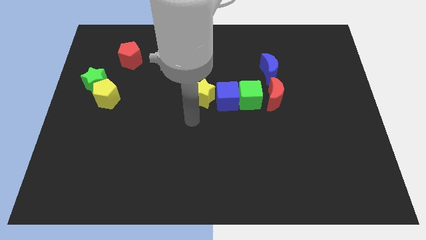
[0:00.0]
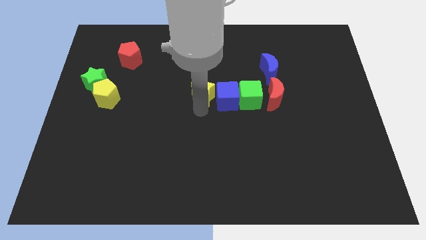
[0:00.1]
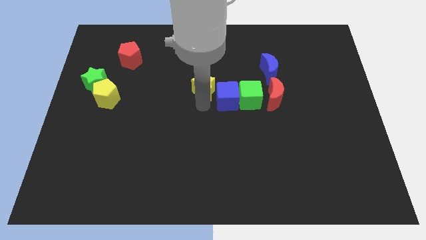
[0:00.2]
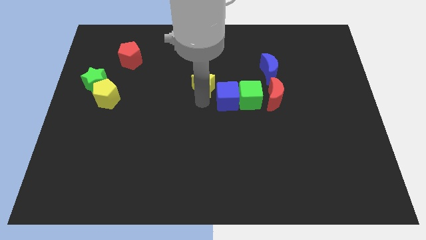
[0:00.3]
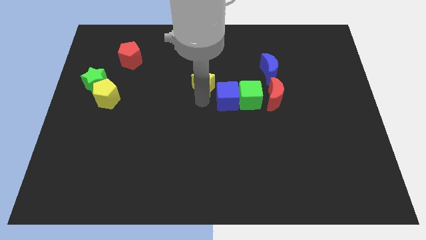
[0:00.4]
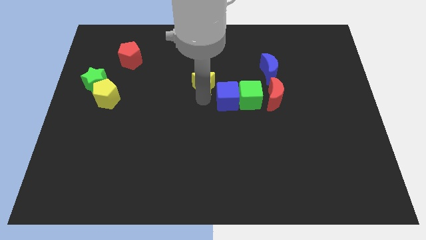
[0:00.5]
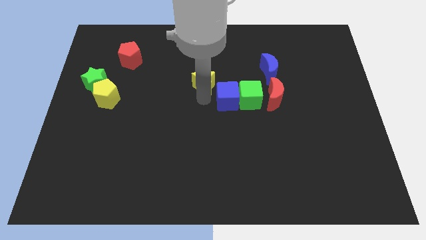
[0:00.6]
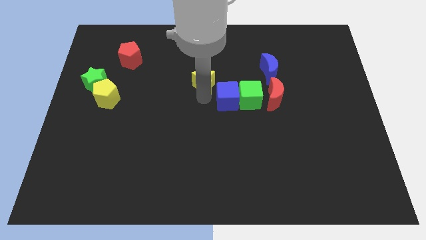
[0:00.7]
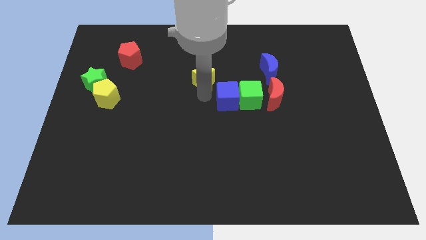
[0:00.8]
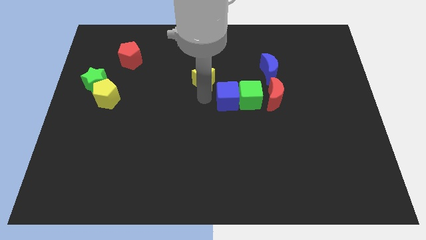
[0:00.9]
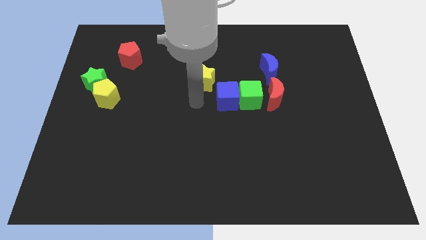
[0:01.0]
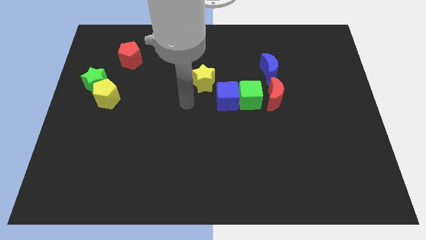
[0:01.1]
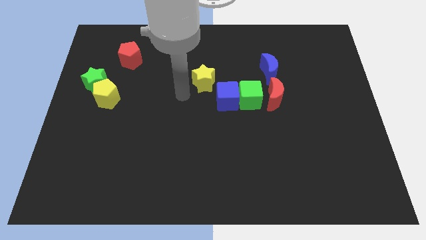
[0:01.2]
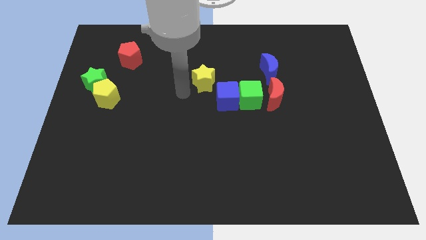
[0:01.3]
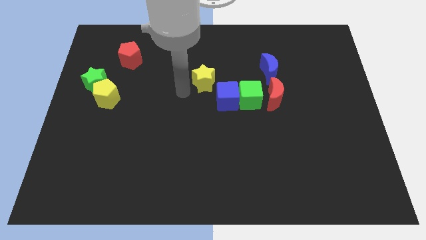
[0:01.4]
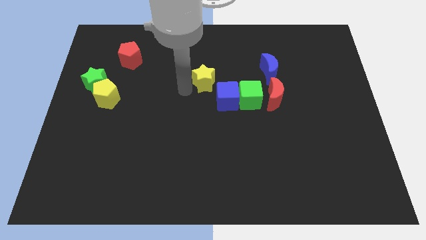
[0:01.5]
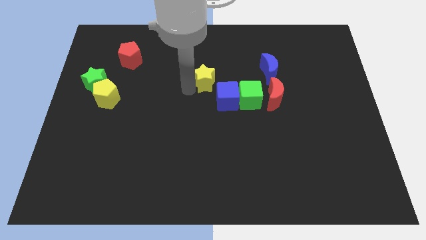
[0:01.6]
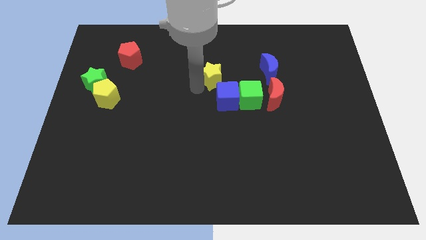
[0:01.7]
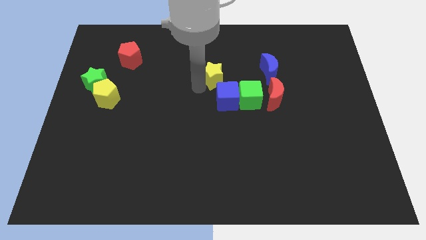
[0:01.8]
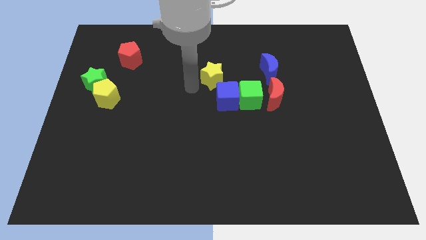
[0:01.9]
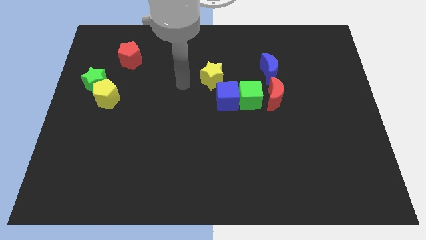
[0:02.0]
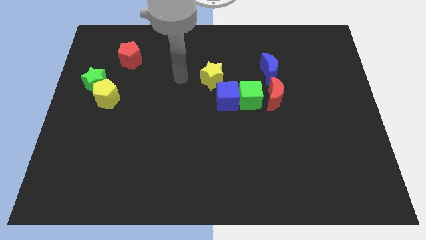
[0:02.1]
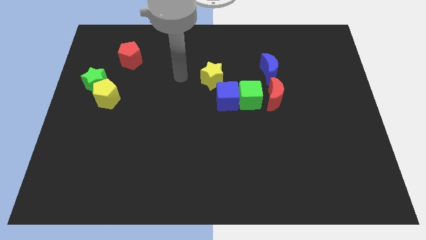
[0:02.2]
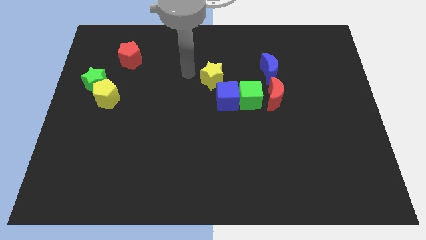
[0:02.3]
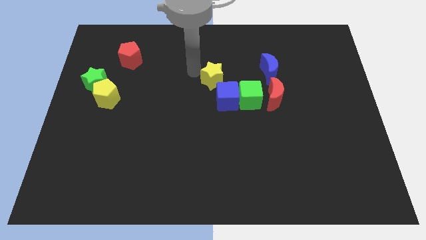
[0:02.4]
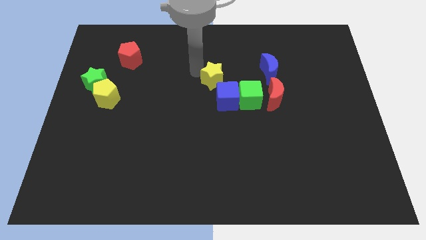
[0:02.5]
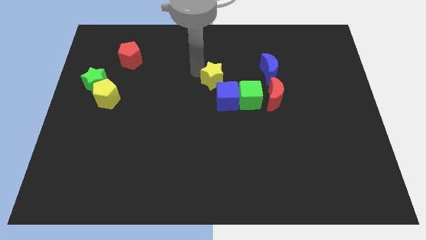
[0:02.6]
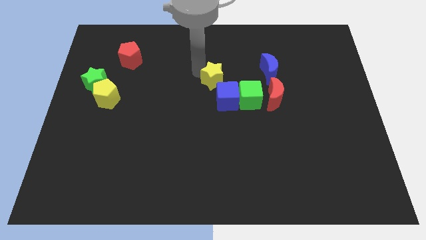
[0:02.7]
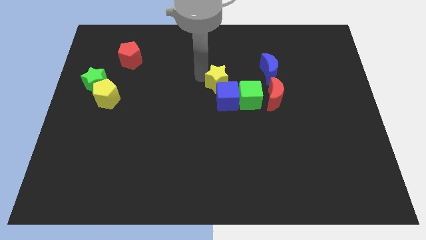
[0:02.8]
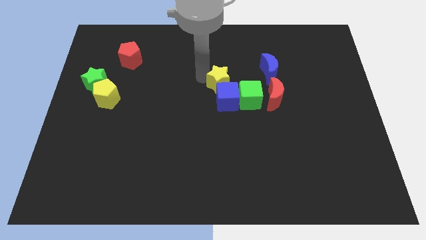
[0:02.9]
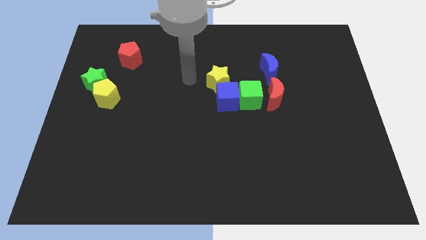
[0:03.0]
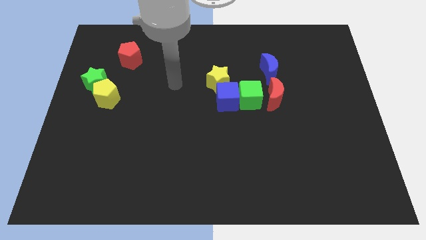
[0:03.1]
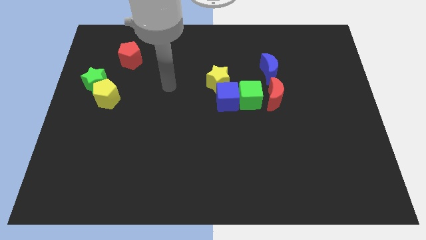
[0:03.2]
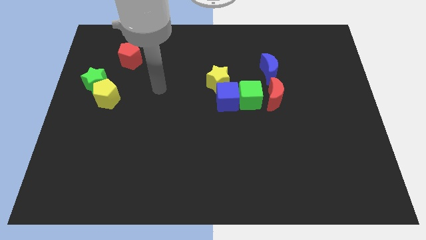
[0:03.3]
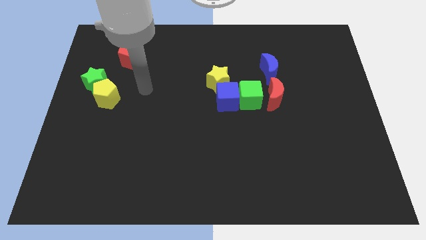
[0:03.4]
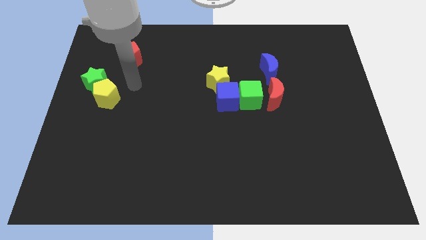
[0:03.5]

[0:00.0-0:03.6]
push the yellow star into the blue cube

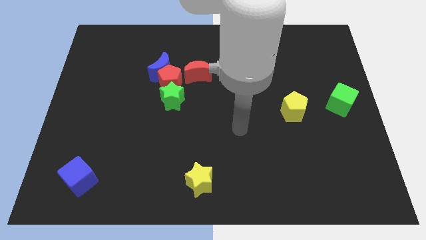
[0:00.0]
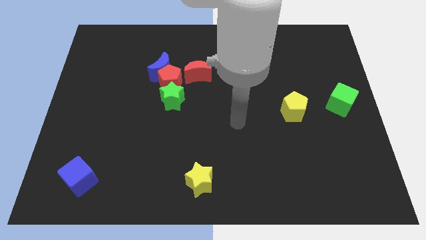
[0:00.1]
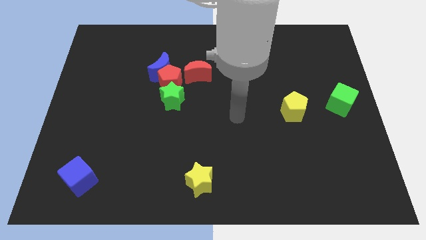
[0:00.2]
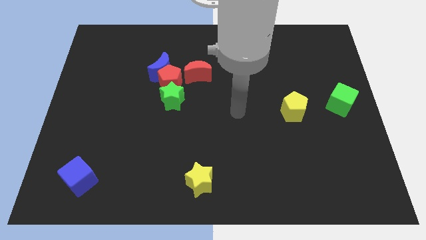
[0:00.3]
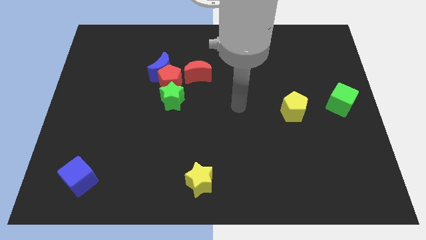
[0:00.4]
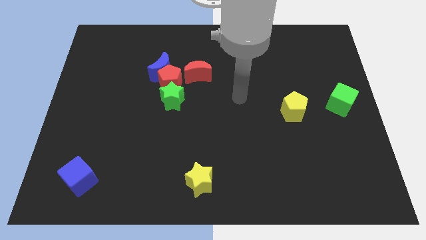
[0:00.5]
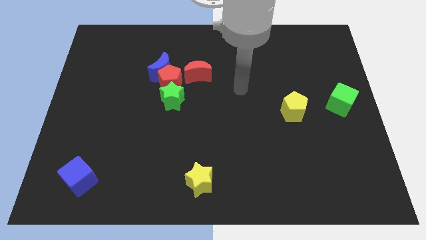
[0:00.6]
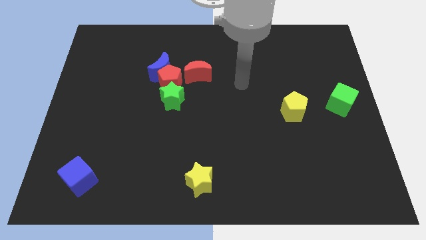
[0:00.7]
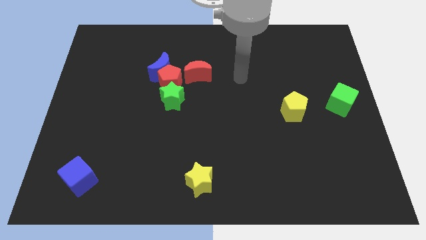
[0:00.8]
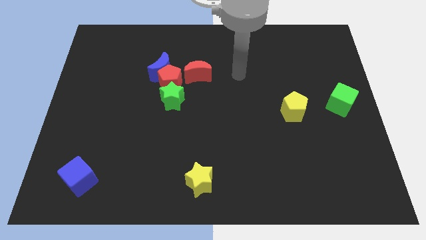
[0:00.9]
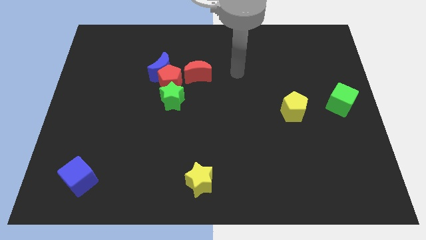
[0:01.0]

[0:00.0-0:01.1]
slide your arm to the right of red moon

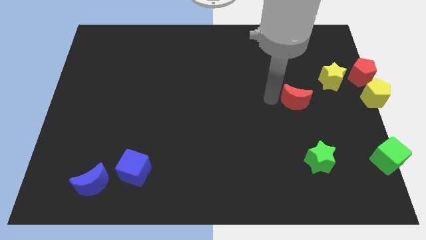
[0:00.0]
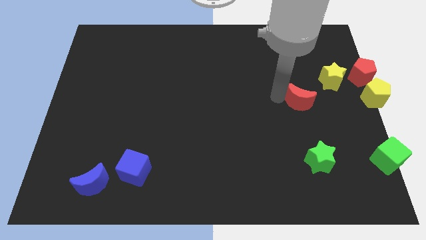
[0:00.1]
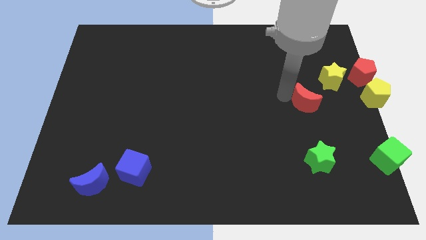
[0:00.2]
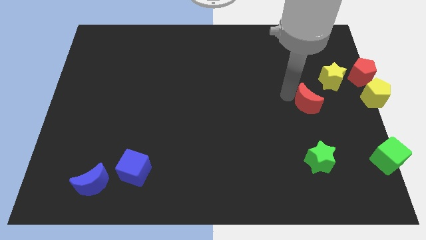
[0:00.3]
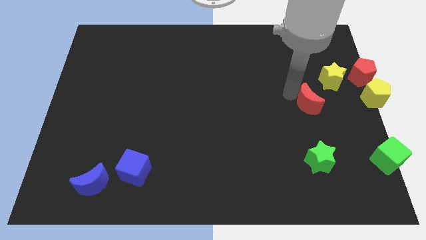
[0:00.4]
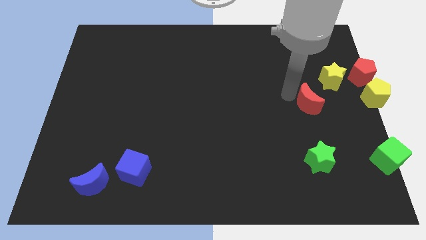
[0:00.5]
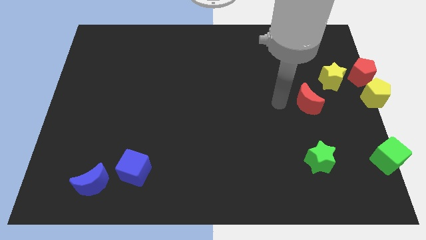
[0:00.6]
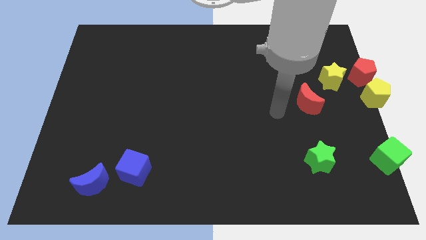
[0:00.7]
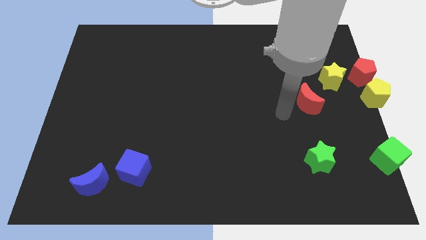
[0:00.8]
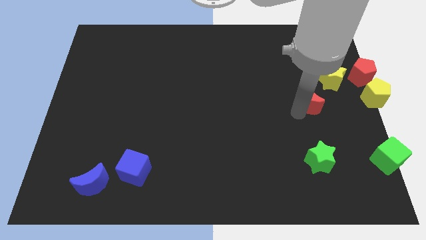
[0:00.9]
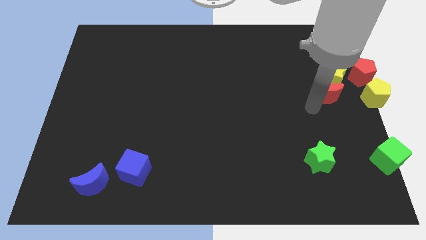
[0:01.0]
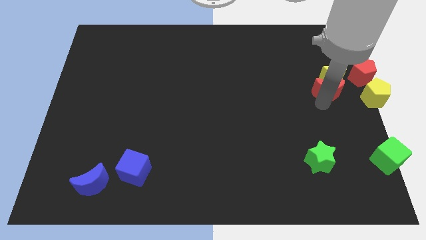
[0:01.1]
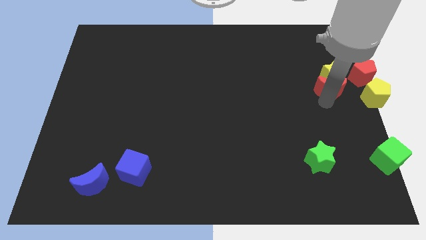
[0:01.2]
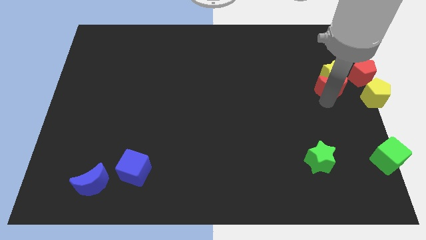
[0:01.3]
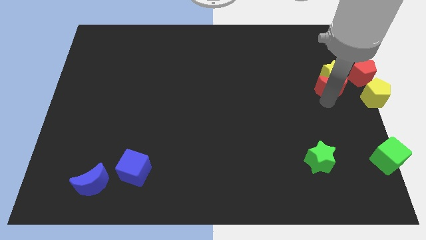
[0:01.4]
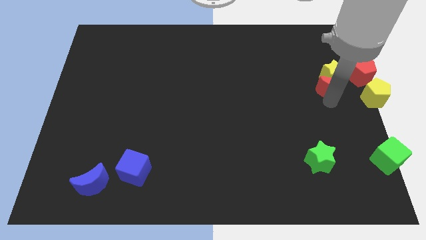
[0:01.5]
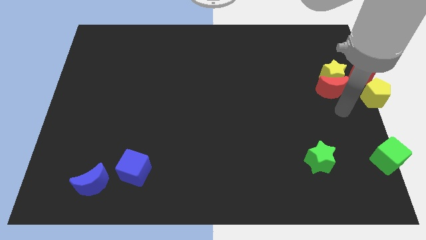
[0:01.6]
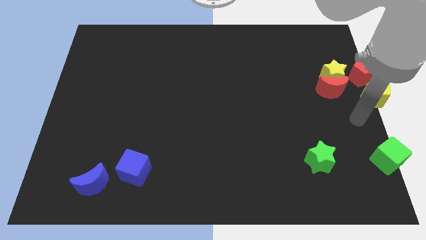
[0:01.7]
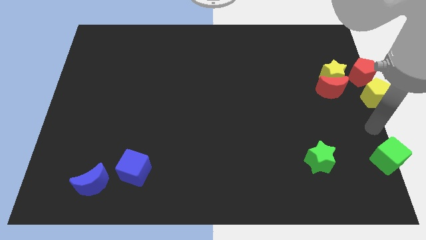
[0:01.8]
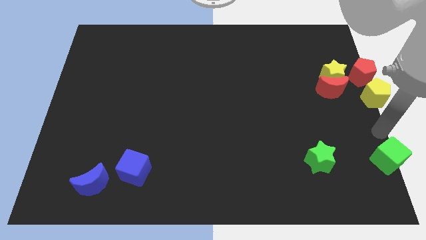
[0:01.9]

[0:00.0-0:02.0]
move the red crescent to the bottom of the yellow star

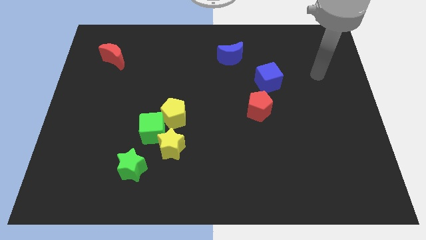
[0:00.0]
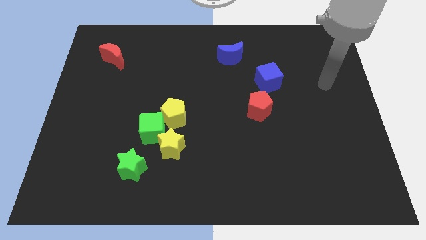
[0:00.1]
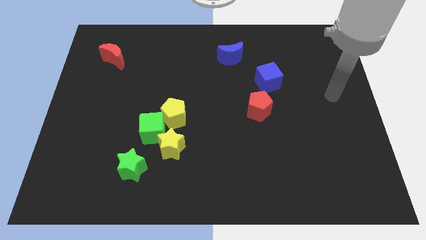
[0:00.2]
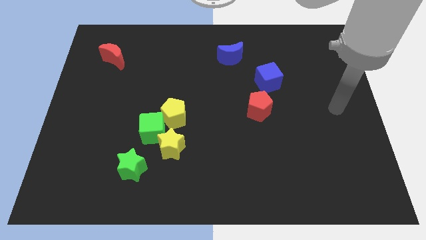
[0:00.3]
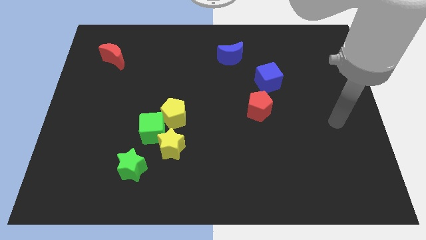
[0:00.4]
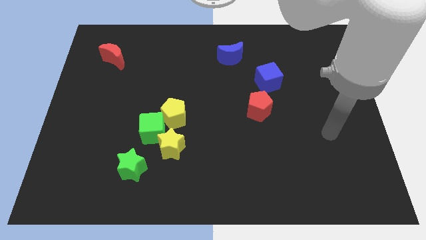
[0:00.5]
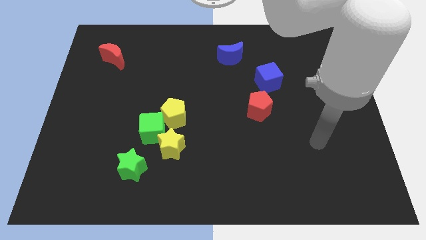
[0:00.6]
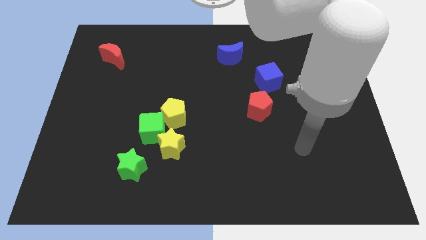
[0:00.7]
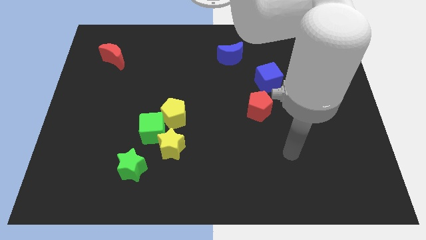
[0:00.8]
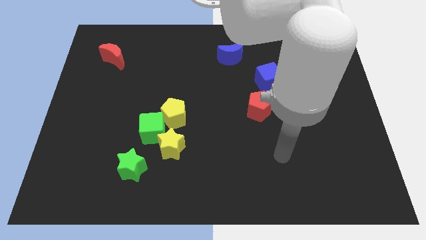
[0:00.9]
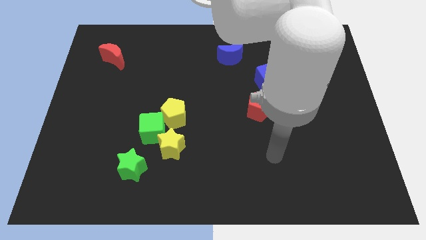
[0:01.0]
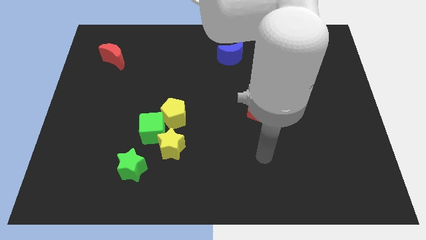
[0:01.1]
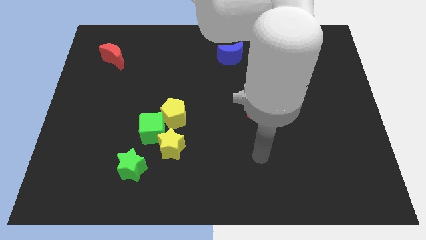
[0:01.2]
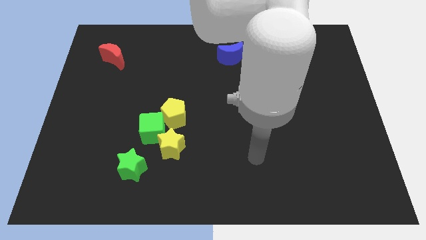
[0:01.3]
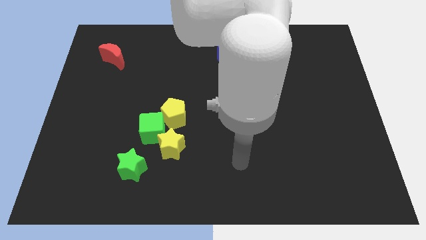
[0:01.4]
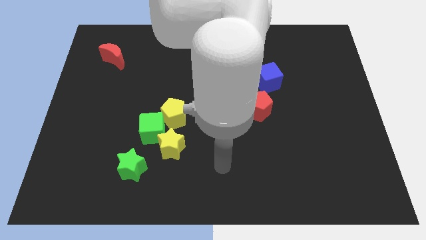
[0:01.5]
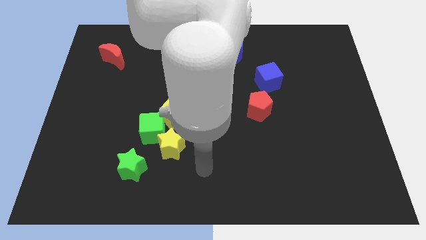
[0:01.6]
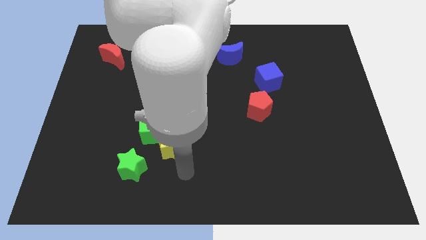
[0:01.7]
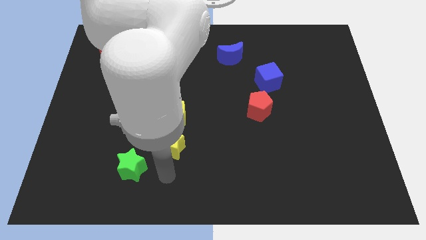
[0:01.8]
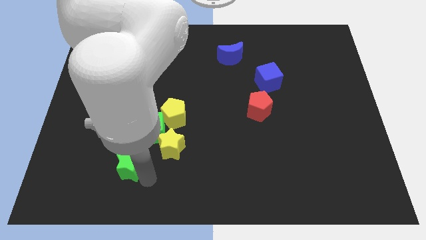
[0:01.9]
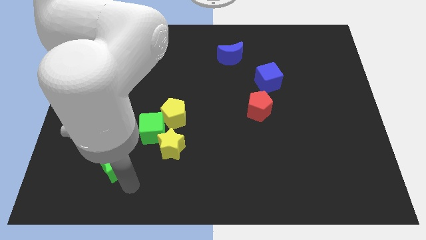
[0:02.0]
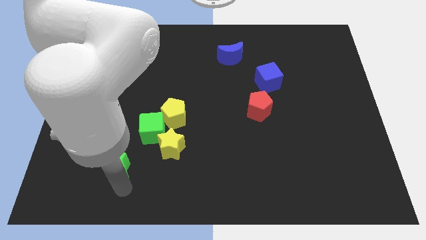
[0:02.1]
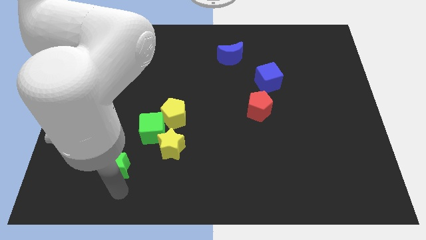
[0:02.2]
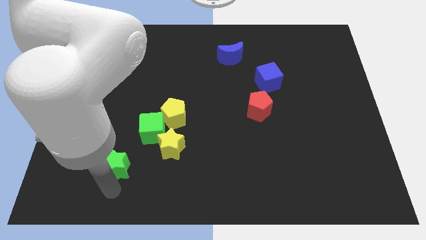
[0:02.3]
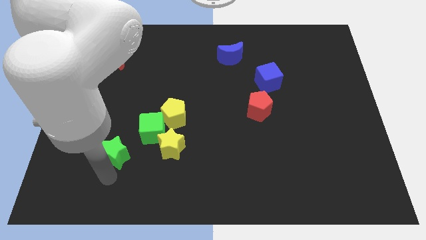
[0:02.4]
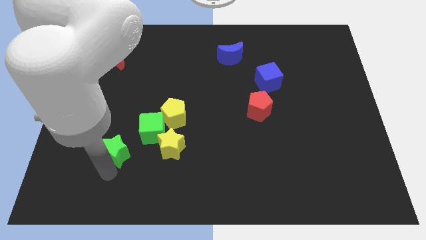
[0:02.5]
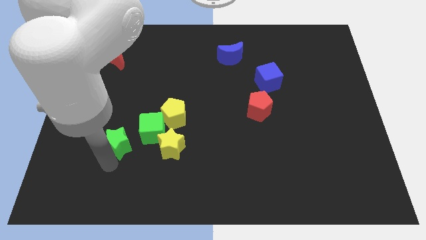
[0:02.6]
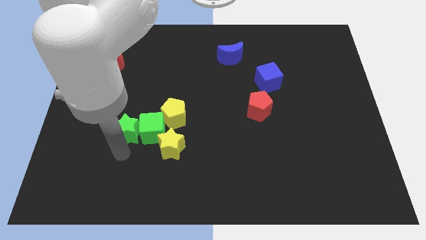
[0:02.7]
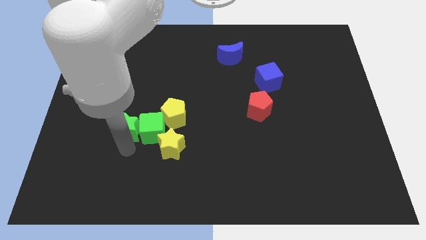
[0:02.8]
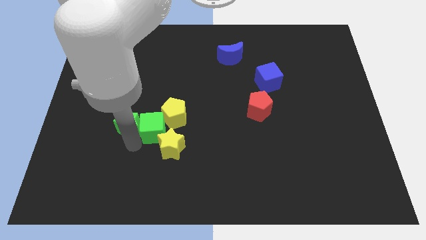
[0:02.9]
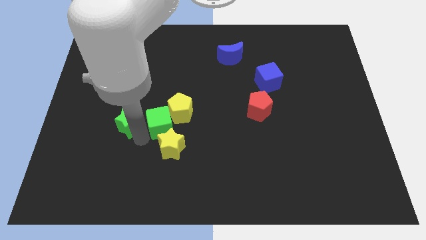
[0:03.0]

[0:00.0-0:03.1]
place the green star at the left side of the green cube
